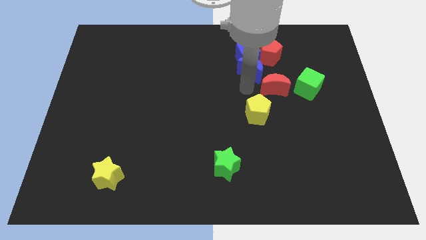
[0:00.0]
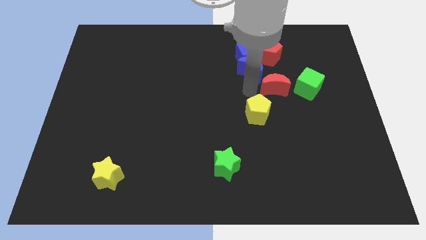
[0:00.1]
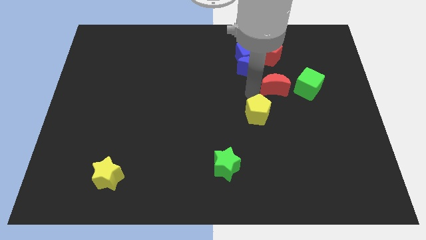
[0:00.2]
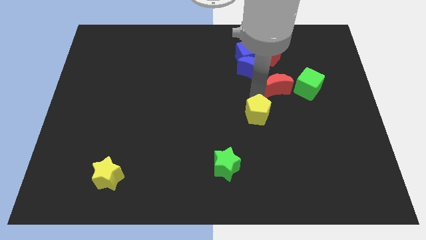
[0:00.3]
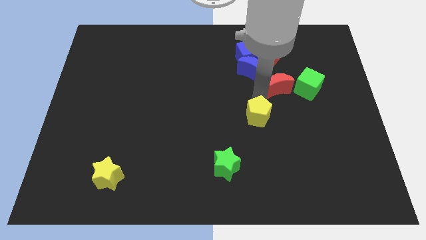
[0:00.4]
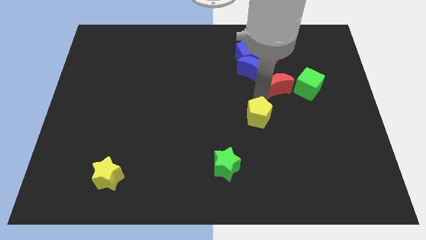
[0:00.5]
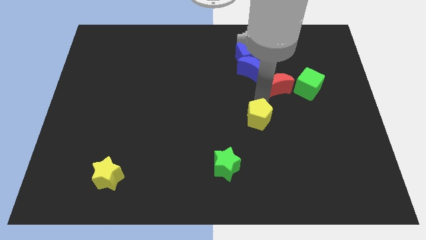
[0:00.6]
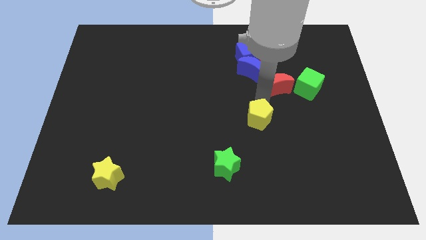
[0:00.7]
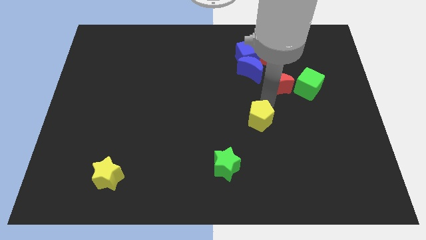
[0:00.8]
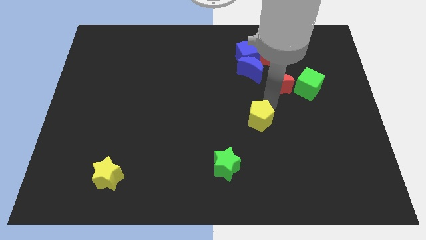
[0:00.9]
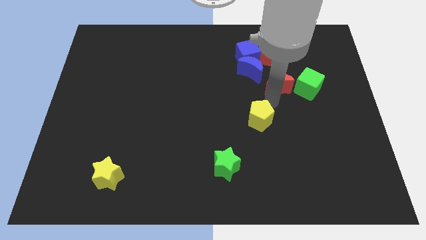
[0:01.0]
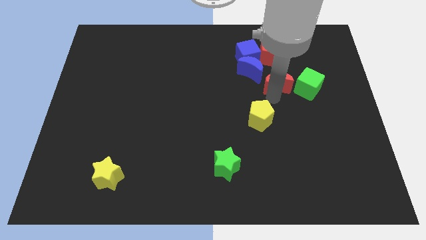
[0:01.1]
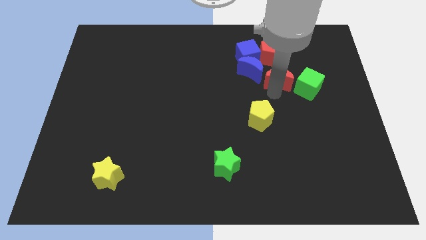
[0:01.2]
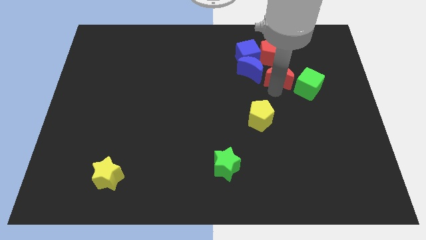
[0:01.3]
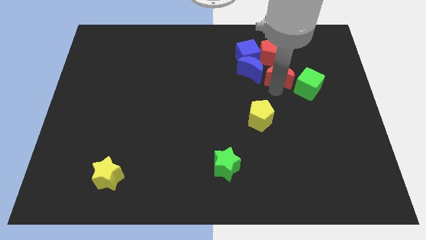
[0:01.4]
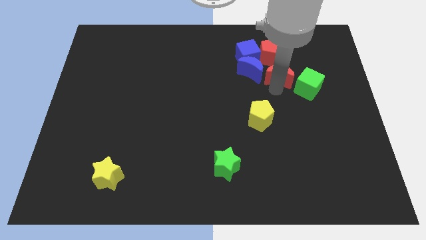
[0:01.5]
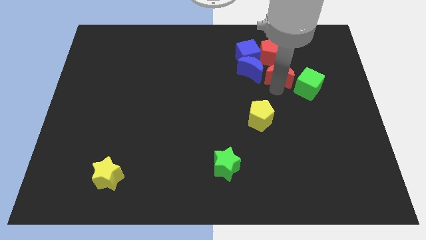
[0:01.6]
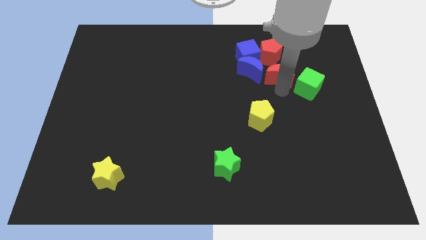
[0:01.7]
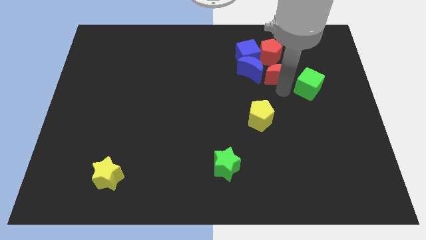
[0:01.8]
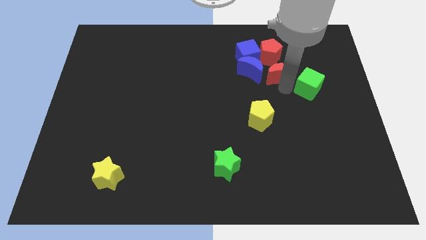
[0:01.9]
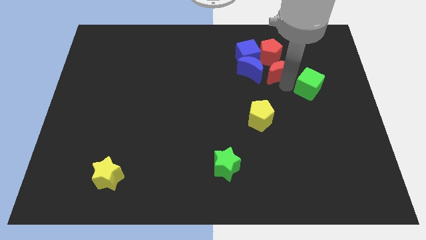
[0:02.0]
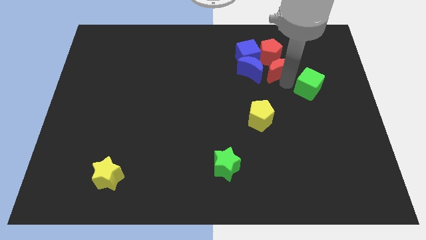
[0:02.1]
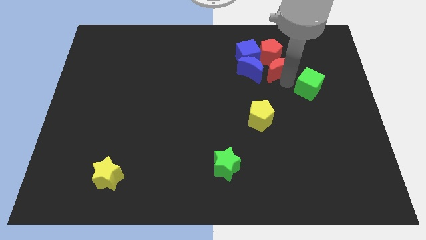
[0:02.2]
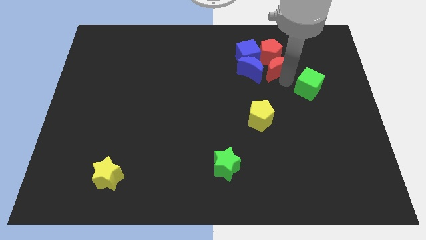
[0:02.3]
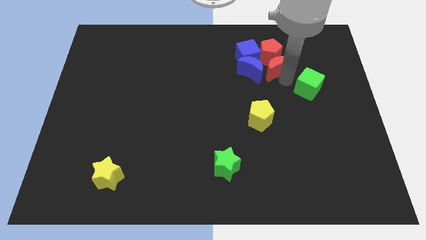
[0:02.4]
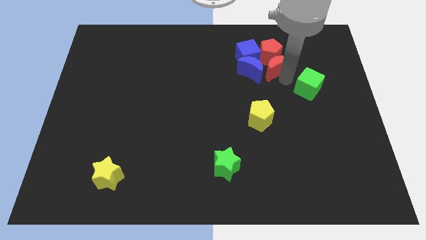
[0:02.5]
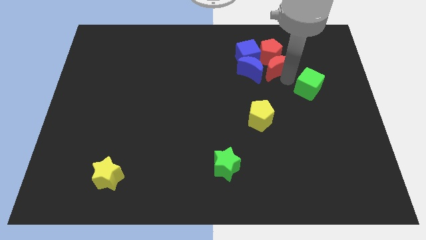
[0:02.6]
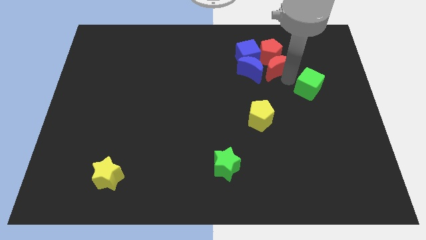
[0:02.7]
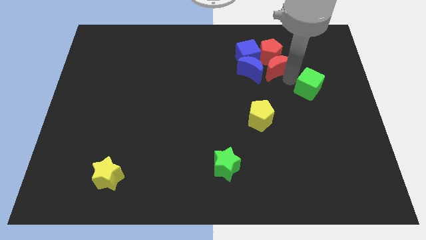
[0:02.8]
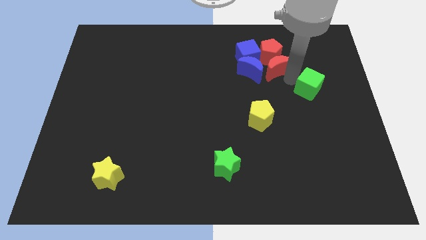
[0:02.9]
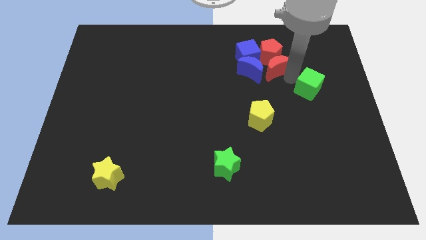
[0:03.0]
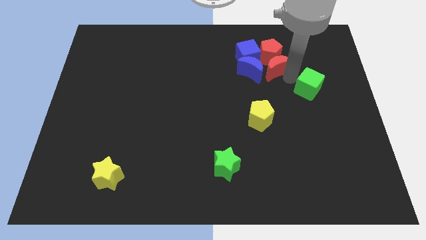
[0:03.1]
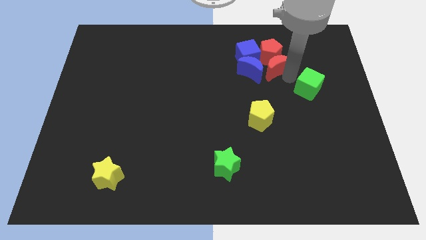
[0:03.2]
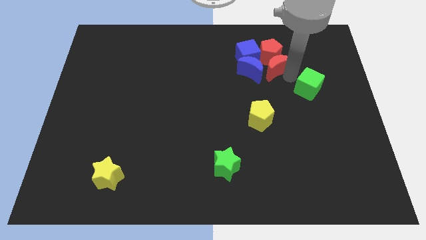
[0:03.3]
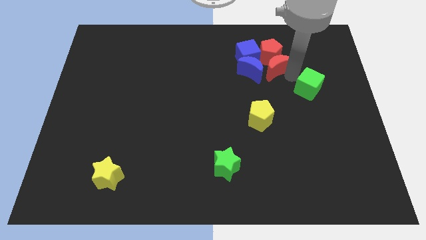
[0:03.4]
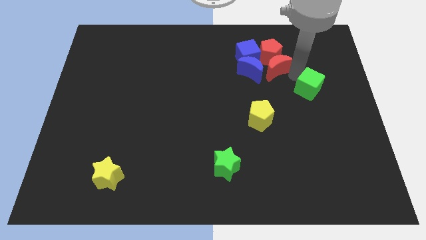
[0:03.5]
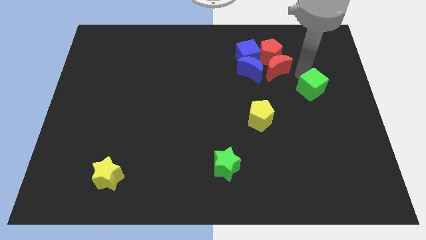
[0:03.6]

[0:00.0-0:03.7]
move the red crescent to the bottom of the red pentagon

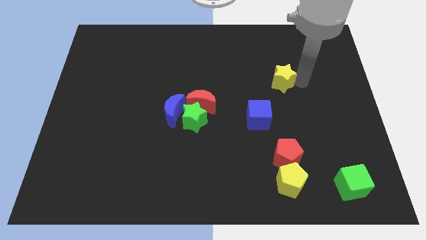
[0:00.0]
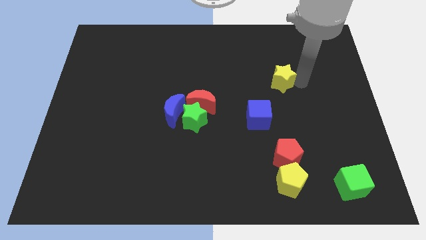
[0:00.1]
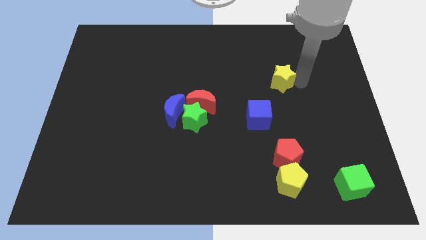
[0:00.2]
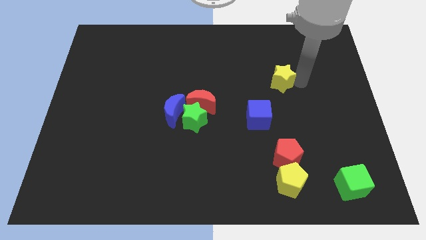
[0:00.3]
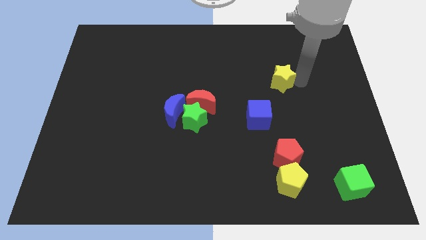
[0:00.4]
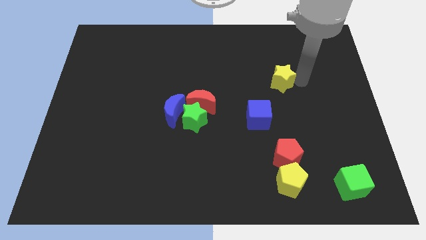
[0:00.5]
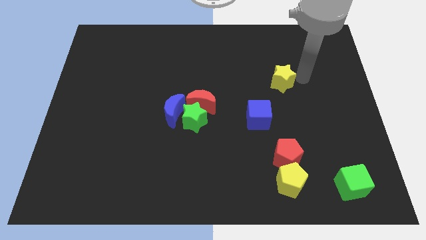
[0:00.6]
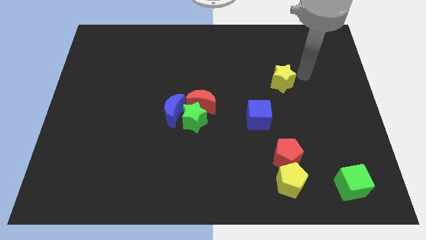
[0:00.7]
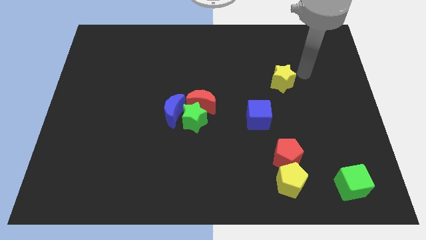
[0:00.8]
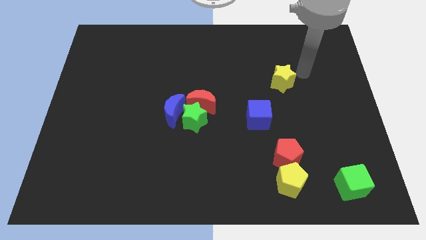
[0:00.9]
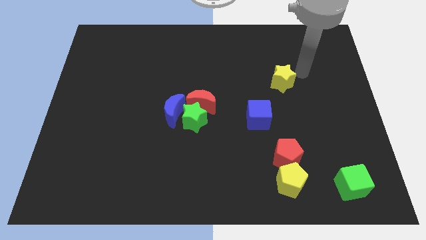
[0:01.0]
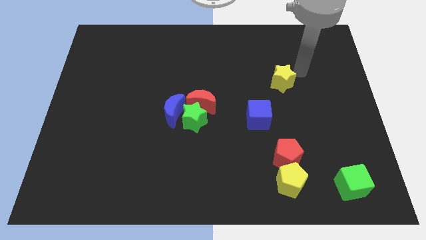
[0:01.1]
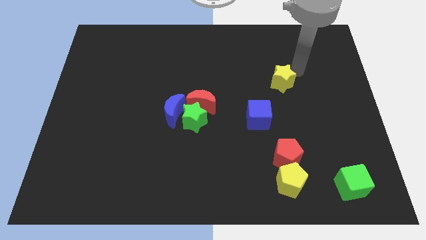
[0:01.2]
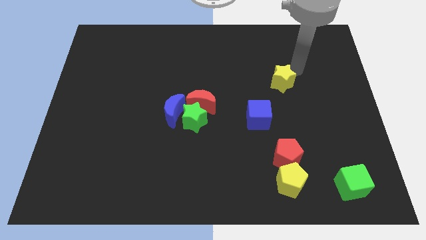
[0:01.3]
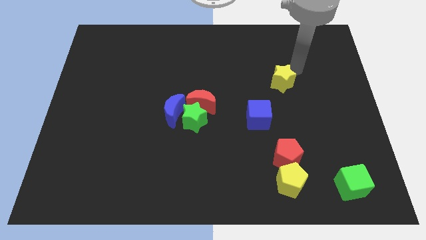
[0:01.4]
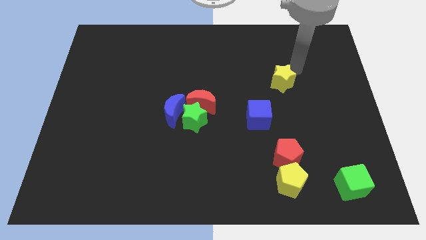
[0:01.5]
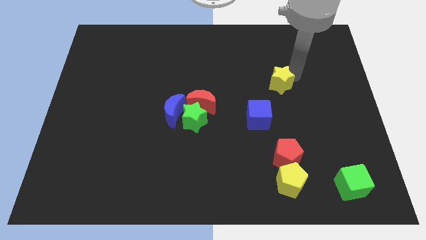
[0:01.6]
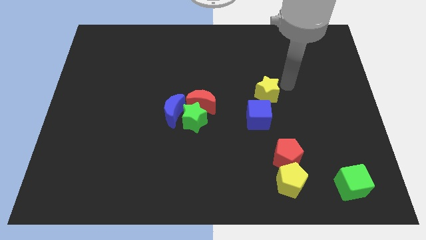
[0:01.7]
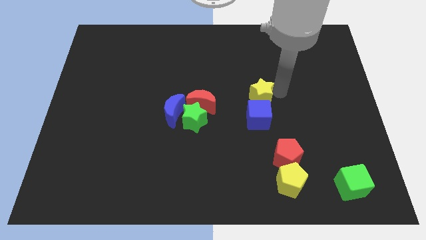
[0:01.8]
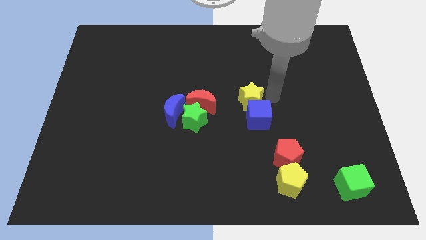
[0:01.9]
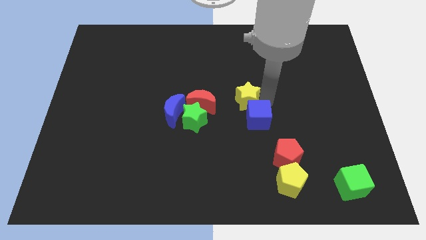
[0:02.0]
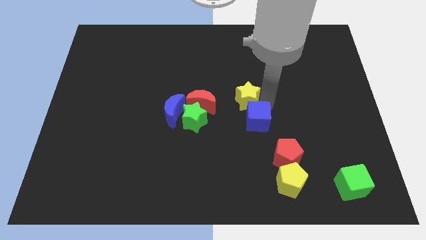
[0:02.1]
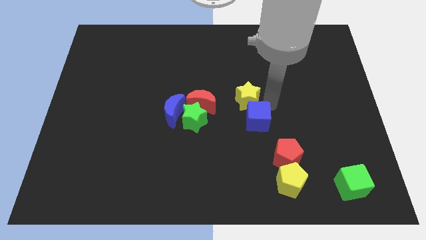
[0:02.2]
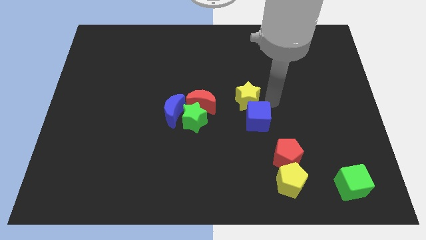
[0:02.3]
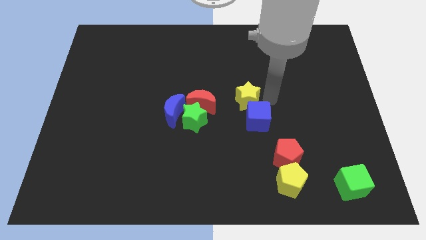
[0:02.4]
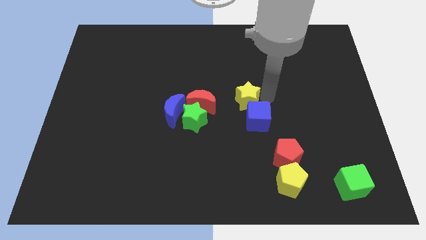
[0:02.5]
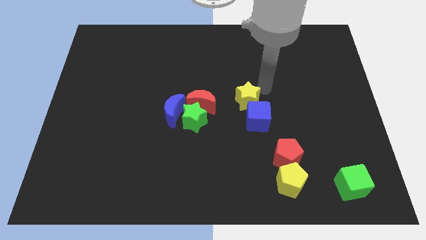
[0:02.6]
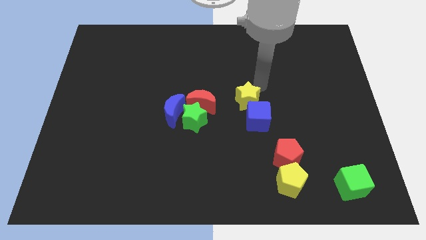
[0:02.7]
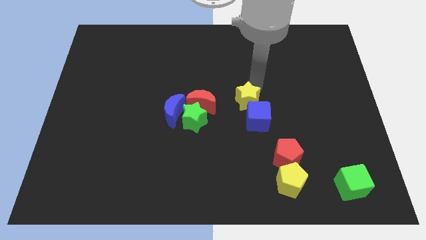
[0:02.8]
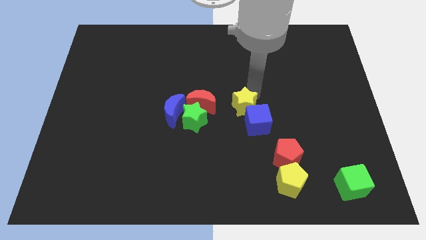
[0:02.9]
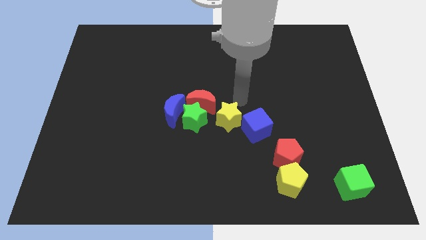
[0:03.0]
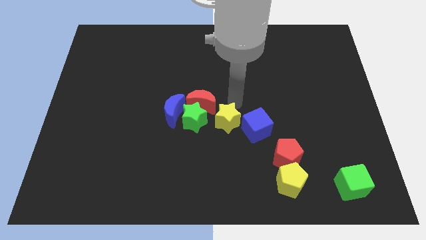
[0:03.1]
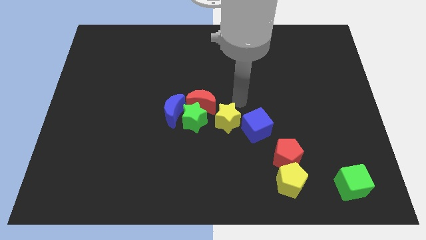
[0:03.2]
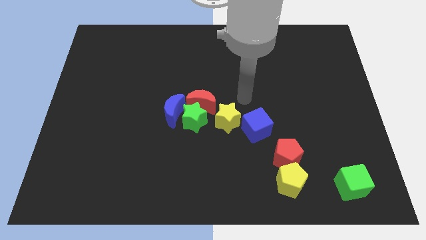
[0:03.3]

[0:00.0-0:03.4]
place the yellow star to the left of the blue cube

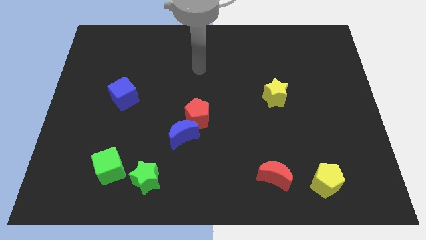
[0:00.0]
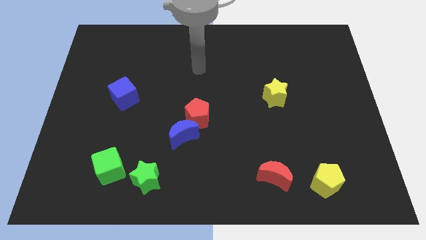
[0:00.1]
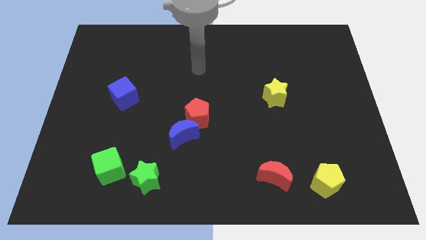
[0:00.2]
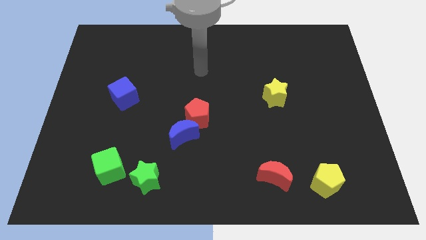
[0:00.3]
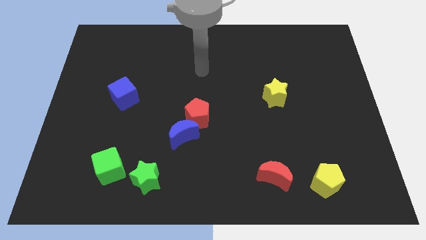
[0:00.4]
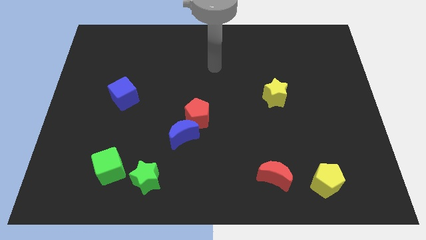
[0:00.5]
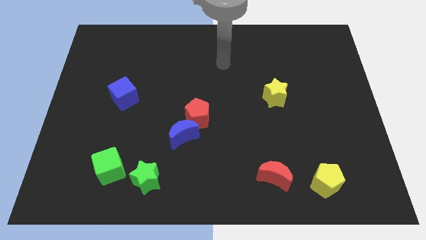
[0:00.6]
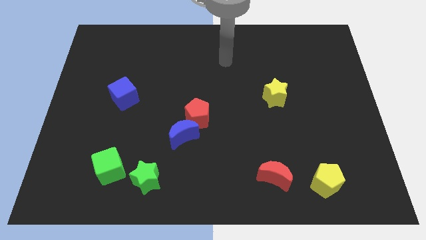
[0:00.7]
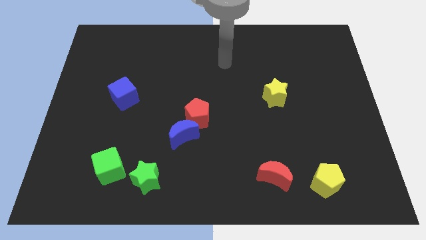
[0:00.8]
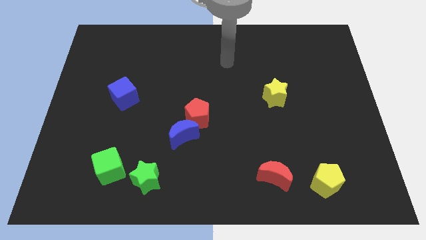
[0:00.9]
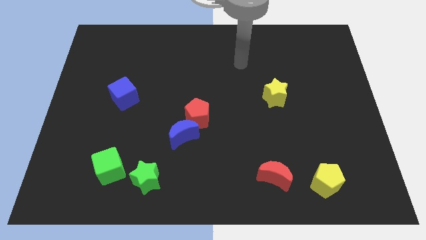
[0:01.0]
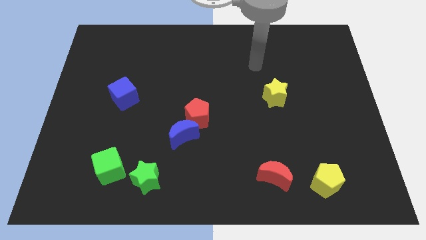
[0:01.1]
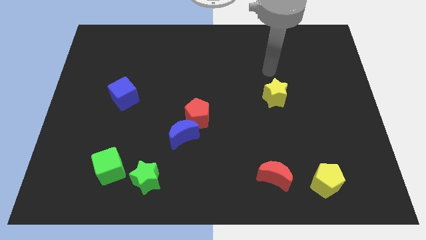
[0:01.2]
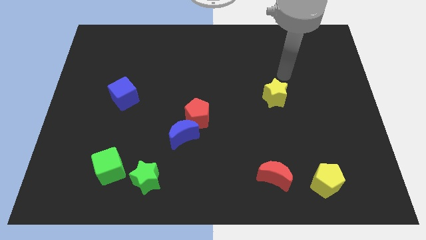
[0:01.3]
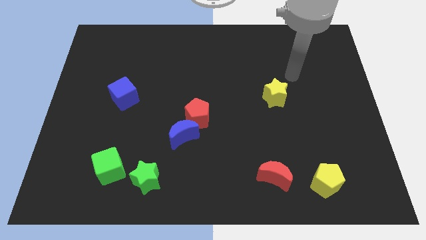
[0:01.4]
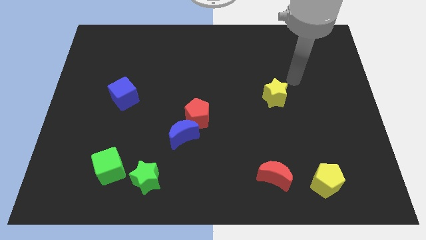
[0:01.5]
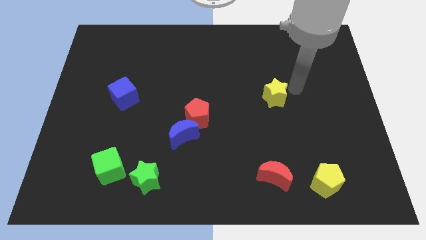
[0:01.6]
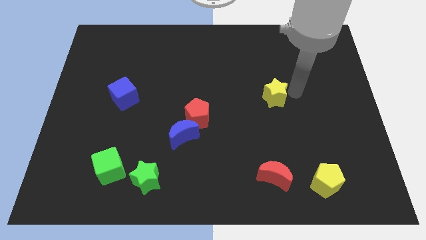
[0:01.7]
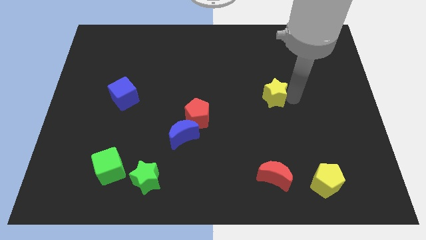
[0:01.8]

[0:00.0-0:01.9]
go and point your hand at the right of the yellow star
